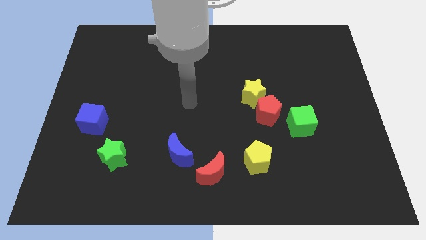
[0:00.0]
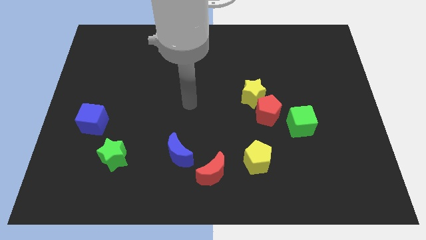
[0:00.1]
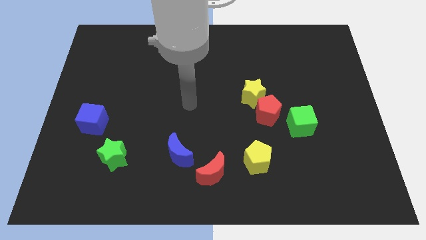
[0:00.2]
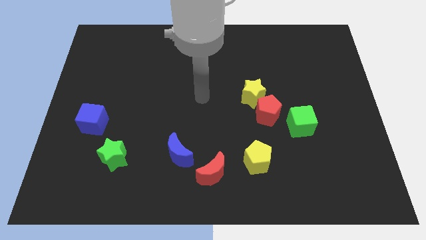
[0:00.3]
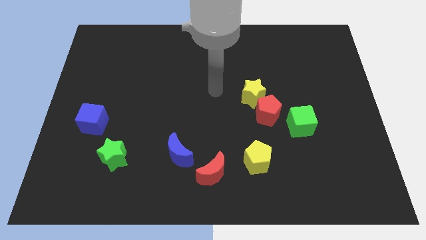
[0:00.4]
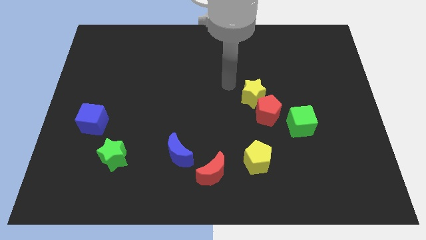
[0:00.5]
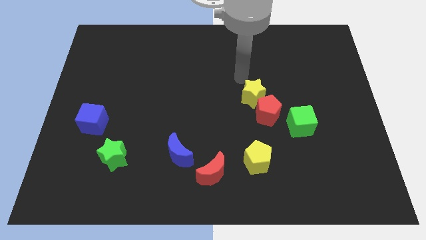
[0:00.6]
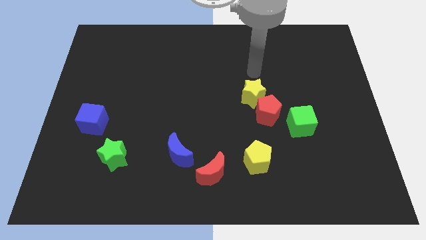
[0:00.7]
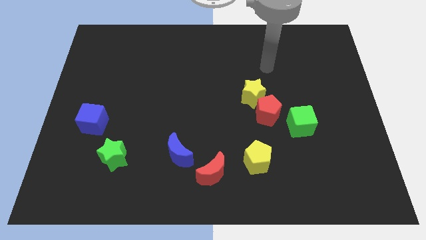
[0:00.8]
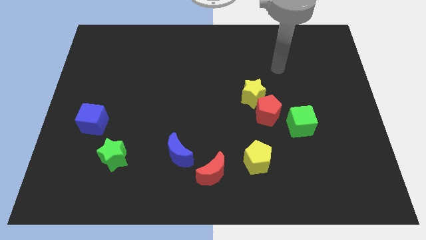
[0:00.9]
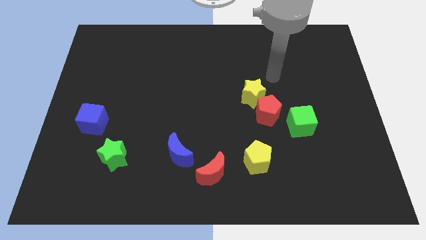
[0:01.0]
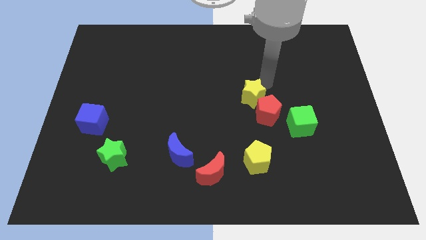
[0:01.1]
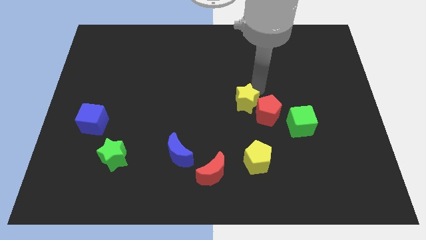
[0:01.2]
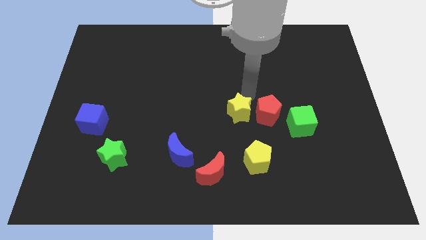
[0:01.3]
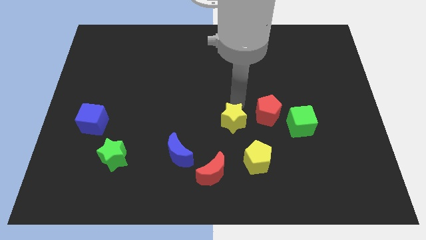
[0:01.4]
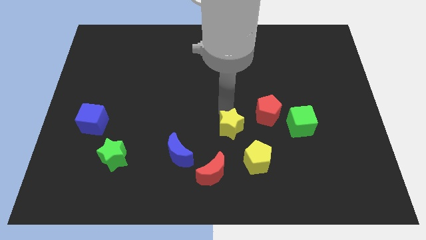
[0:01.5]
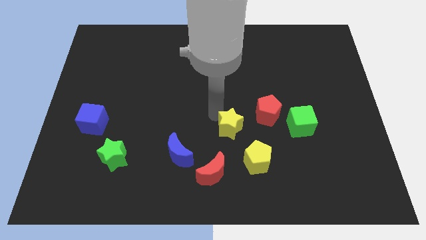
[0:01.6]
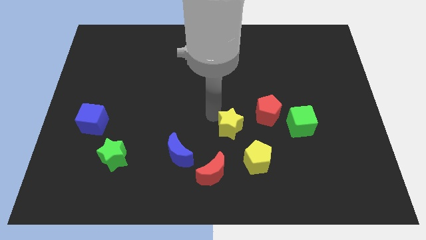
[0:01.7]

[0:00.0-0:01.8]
push the yellow star slightly towards the red moon on the board

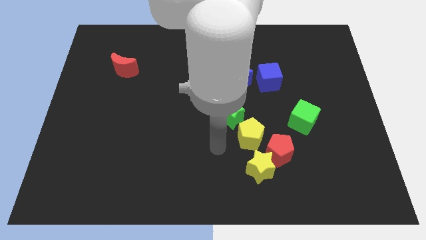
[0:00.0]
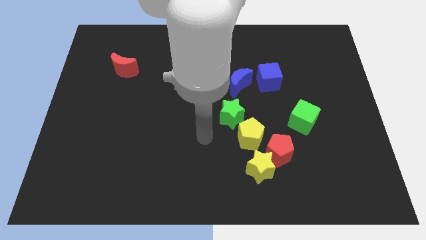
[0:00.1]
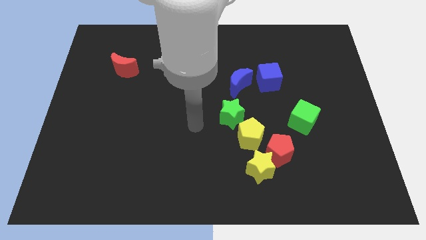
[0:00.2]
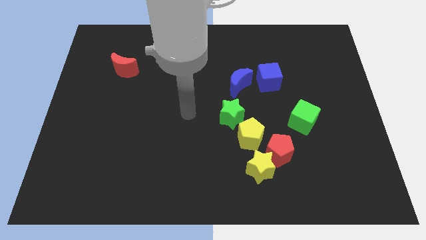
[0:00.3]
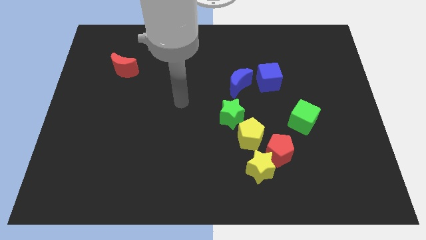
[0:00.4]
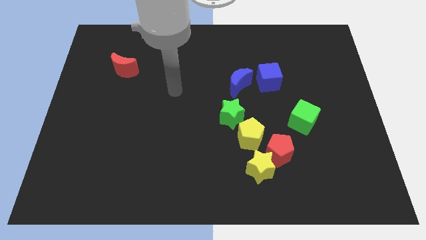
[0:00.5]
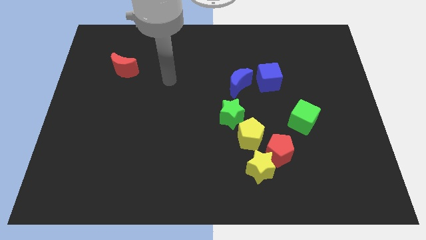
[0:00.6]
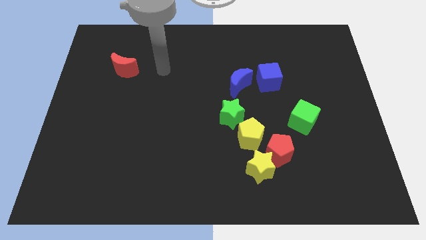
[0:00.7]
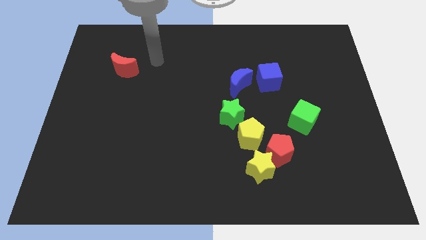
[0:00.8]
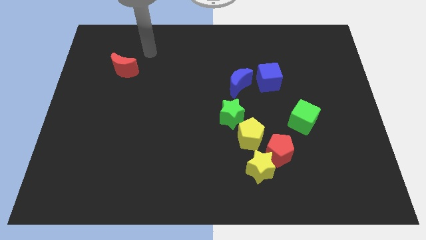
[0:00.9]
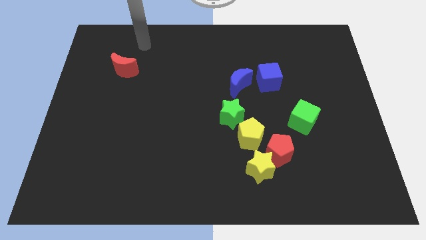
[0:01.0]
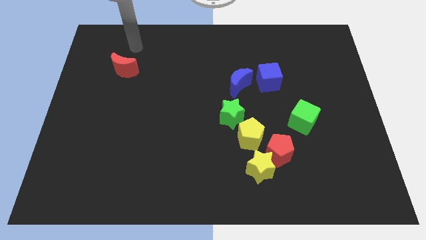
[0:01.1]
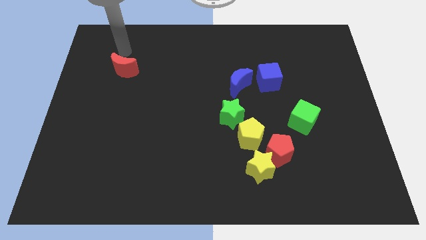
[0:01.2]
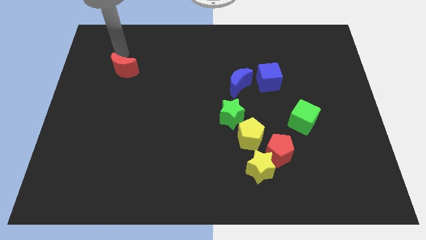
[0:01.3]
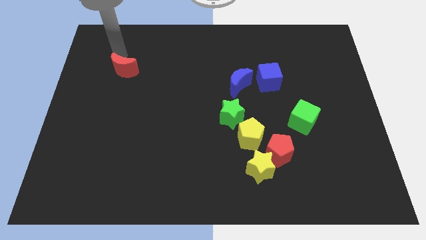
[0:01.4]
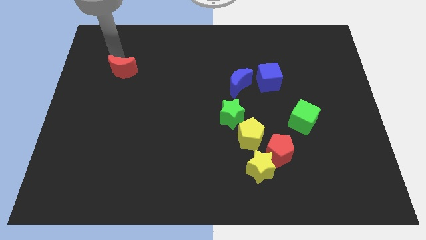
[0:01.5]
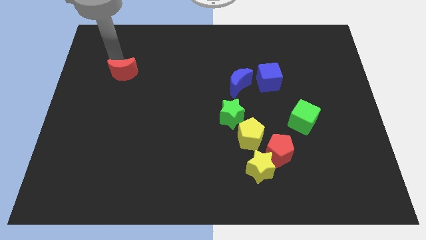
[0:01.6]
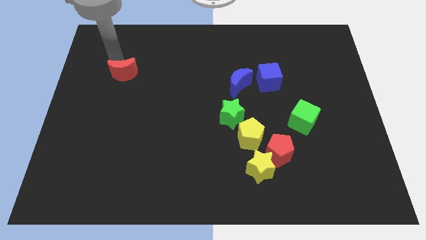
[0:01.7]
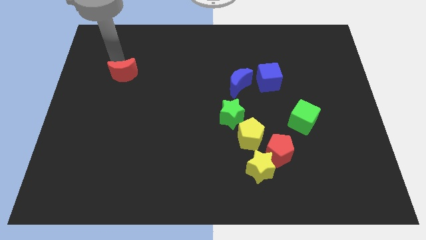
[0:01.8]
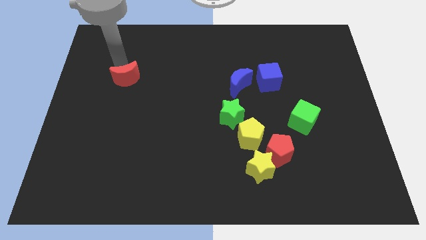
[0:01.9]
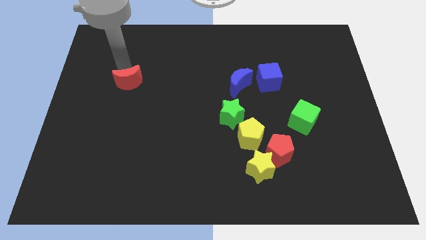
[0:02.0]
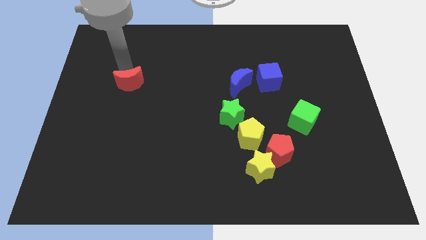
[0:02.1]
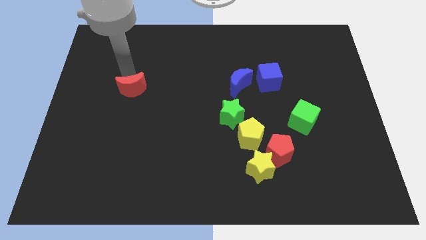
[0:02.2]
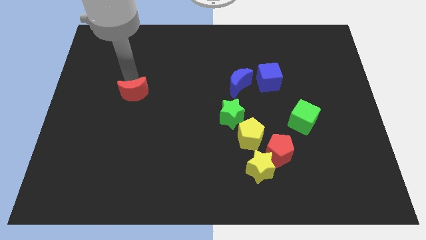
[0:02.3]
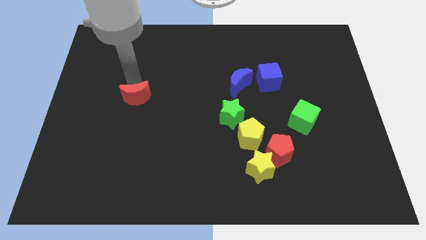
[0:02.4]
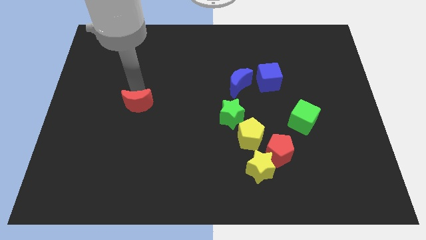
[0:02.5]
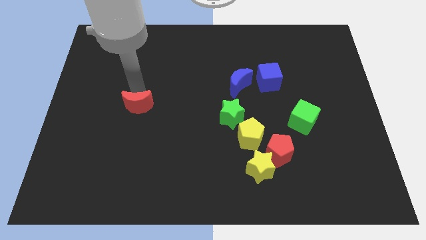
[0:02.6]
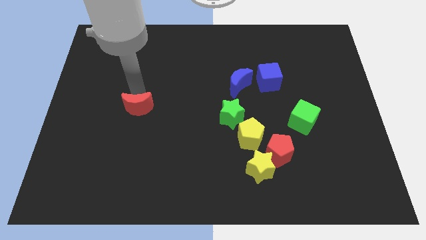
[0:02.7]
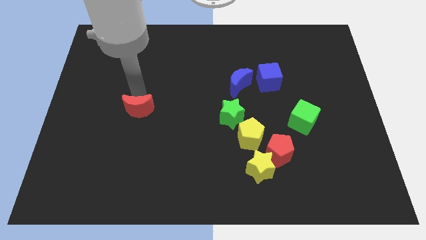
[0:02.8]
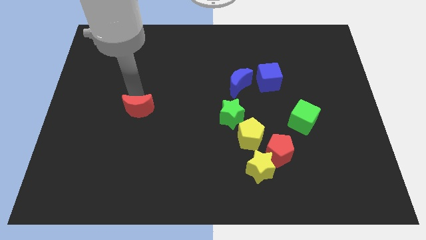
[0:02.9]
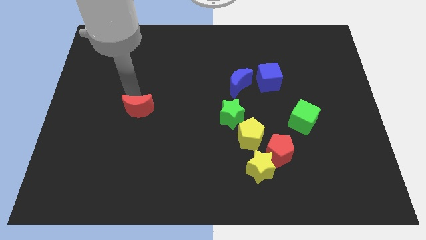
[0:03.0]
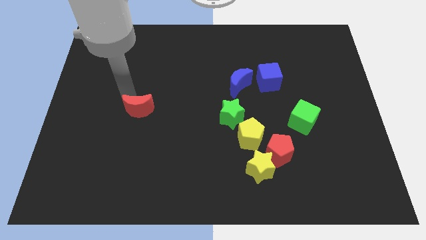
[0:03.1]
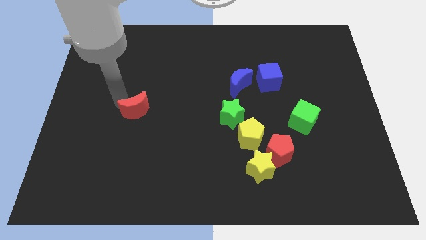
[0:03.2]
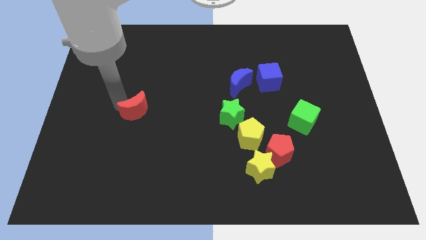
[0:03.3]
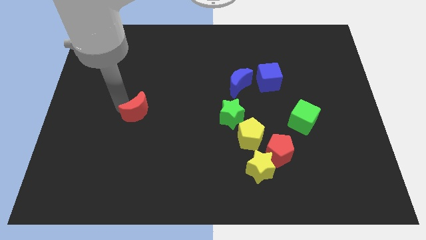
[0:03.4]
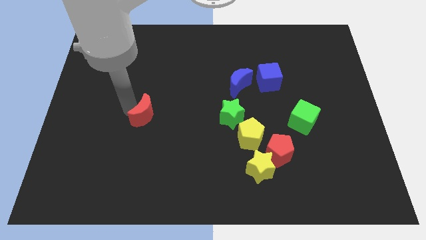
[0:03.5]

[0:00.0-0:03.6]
slide the red crescent horizontally to the left side of the green star

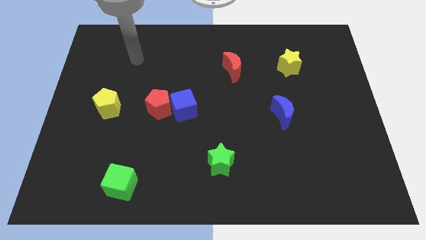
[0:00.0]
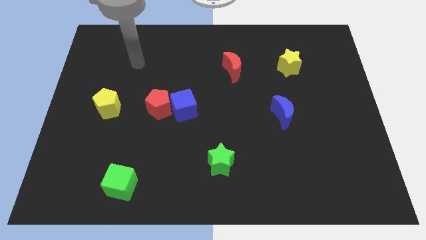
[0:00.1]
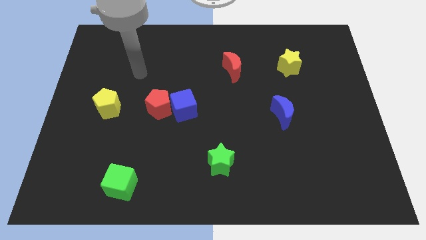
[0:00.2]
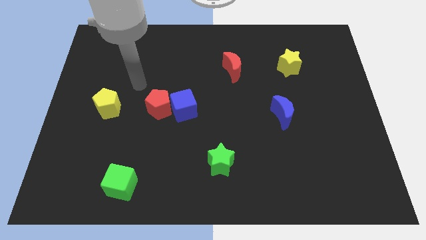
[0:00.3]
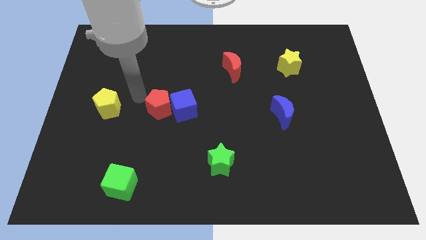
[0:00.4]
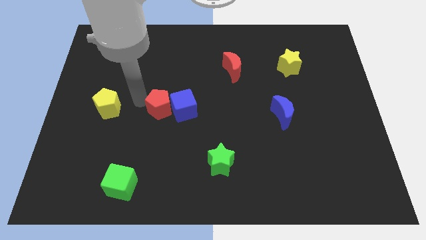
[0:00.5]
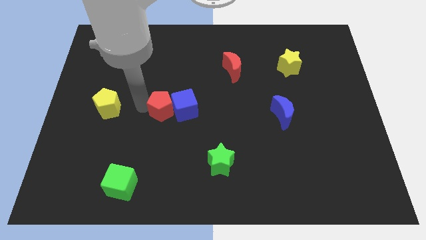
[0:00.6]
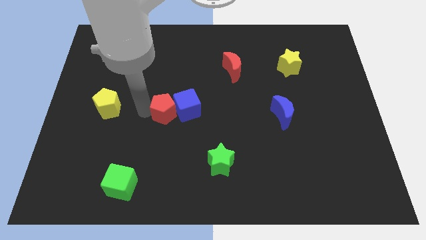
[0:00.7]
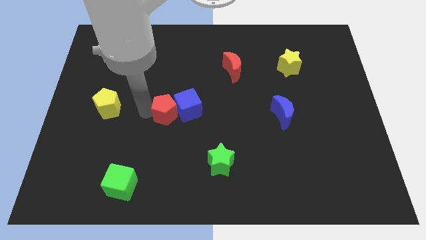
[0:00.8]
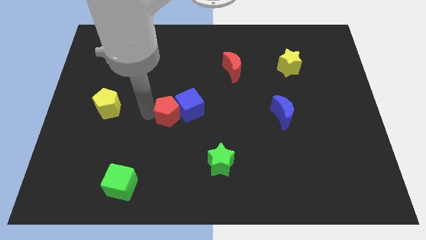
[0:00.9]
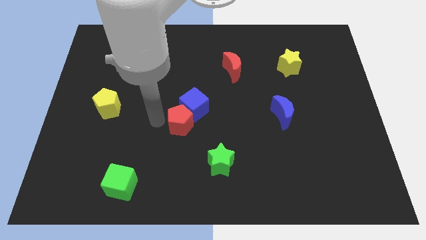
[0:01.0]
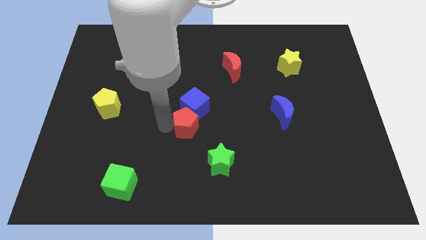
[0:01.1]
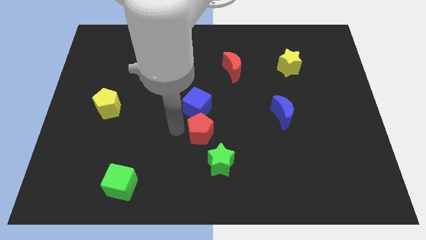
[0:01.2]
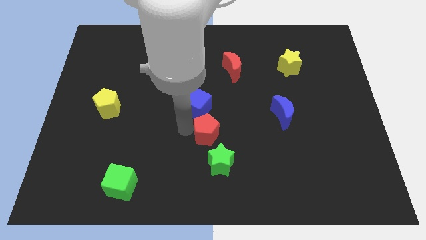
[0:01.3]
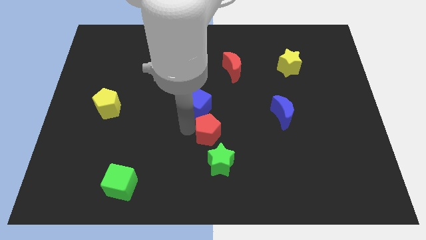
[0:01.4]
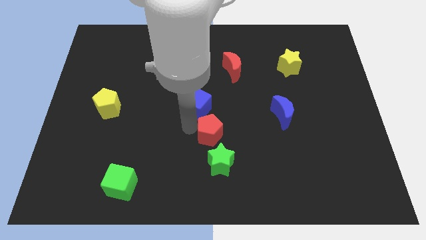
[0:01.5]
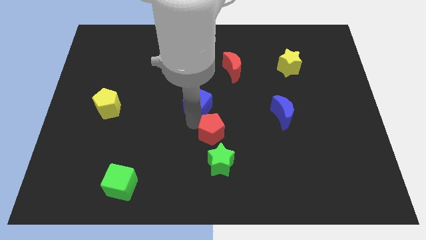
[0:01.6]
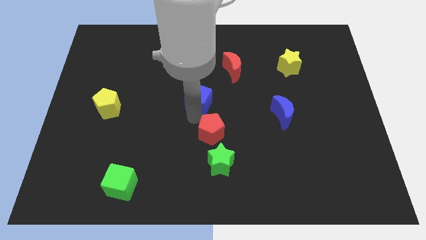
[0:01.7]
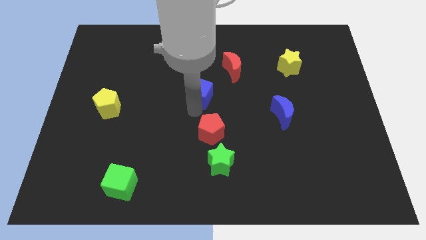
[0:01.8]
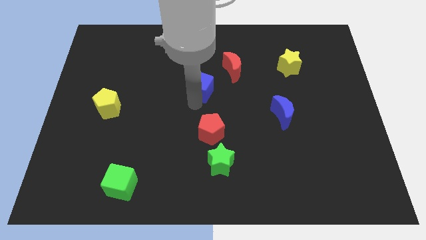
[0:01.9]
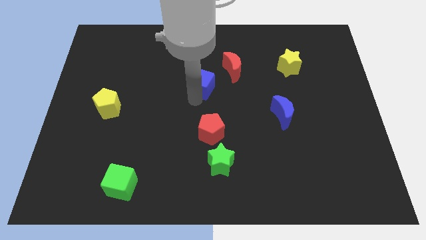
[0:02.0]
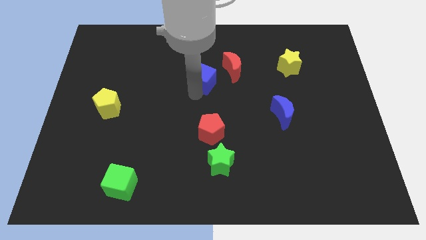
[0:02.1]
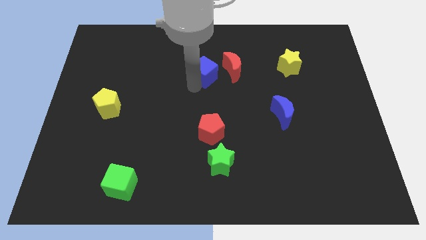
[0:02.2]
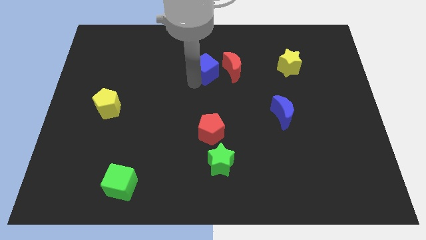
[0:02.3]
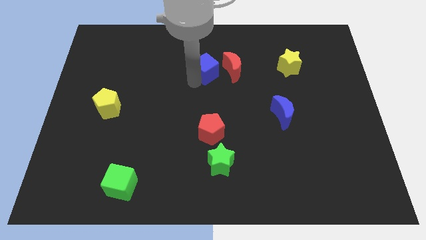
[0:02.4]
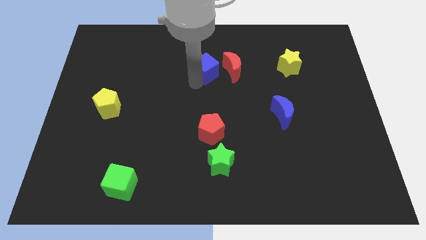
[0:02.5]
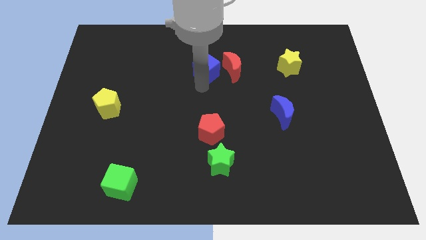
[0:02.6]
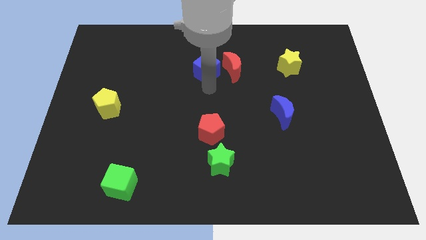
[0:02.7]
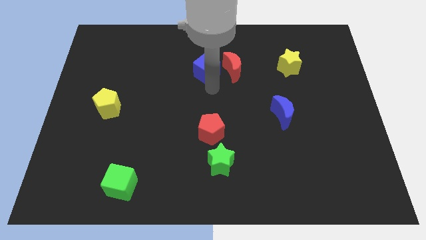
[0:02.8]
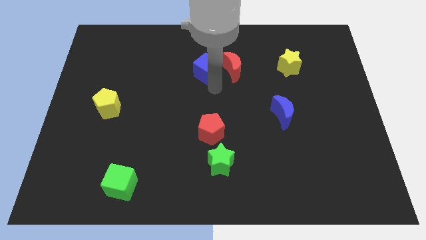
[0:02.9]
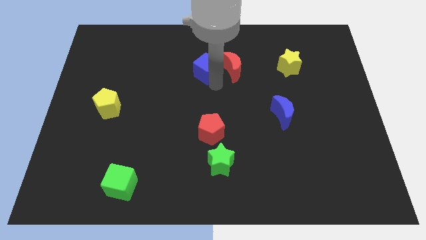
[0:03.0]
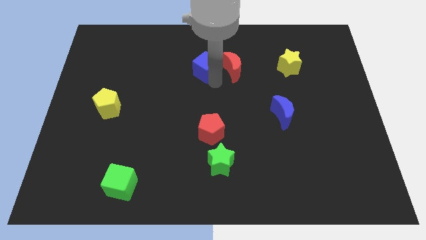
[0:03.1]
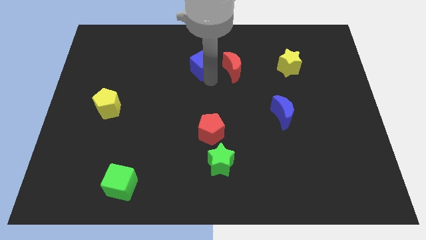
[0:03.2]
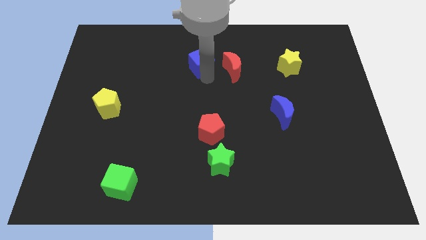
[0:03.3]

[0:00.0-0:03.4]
separate red pentagon and the blue cube

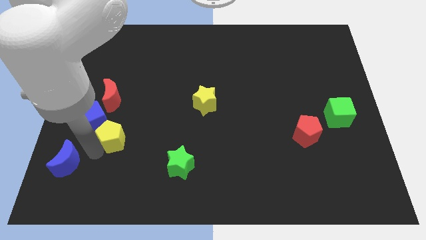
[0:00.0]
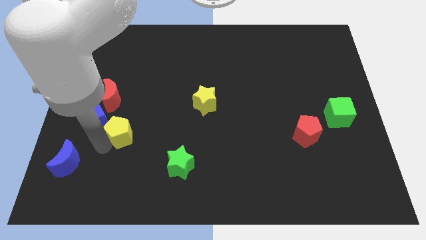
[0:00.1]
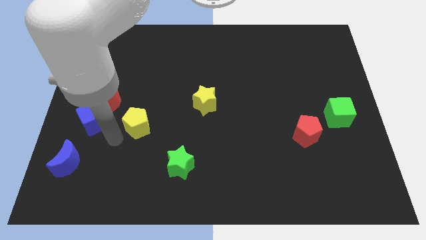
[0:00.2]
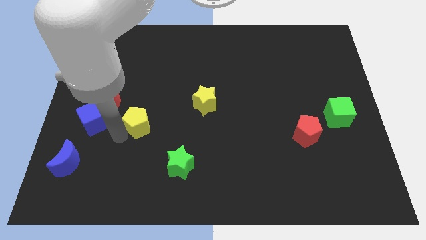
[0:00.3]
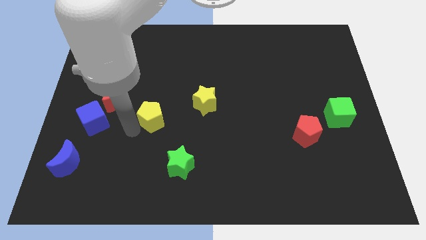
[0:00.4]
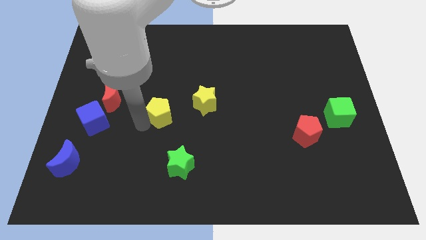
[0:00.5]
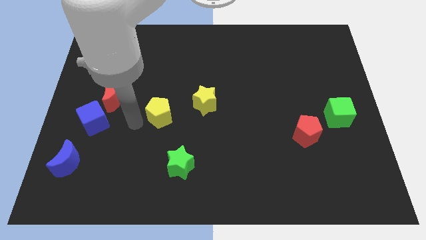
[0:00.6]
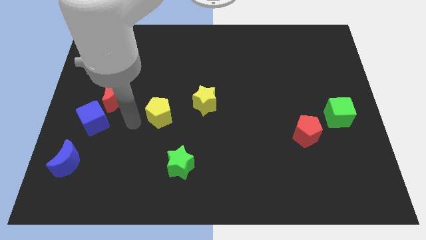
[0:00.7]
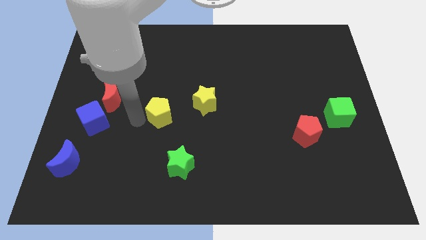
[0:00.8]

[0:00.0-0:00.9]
push the yellow pentagon towards the yellow star
